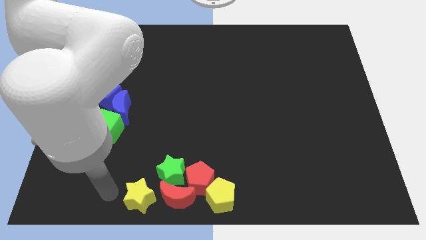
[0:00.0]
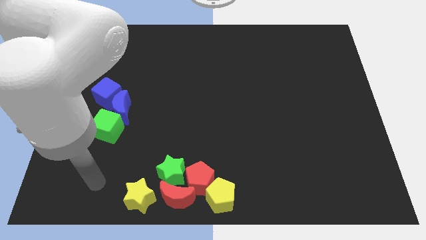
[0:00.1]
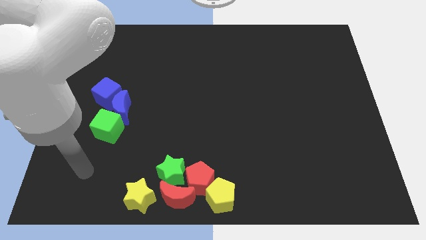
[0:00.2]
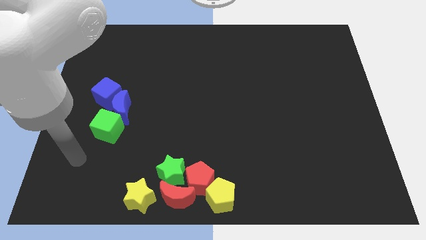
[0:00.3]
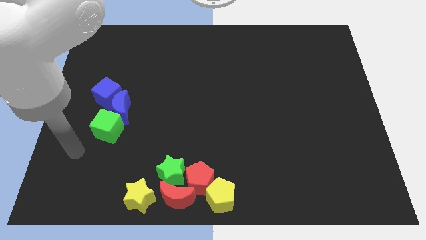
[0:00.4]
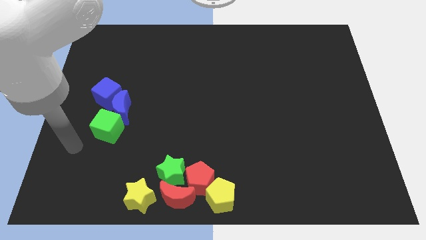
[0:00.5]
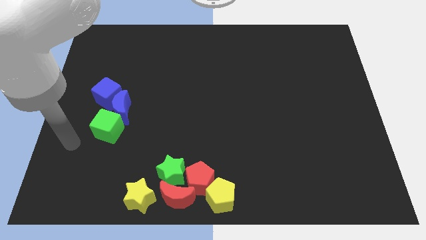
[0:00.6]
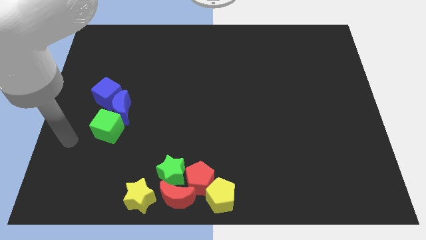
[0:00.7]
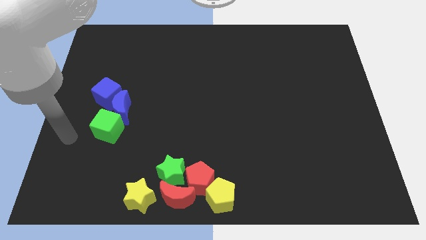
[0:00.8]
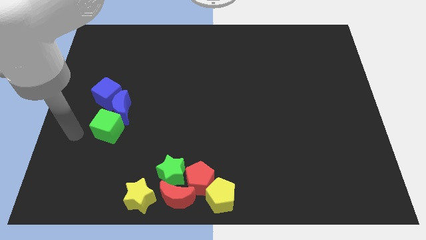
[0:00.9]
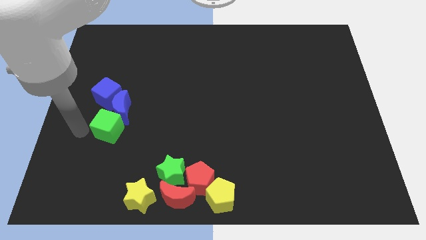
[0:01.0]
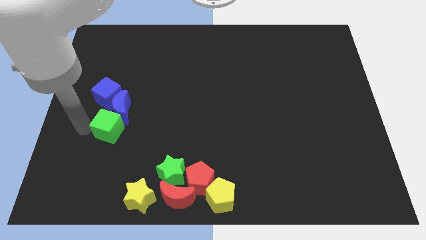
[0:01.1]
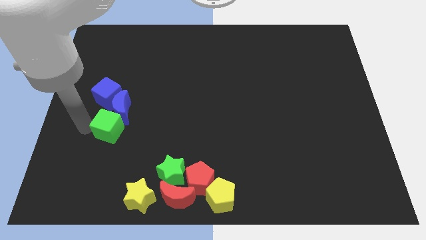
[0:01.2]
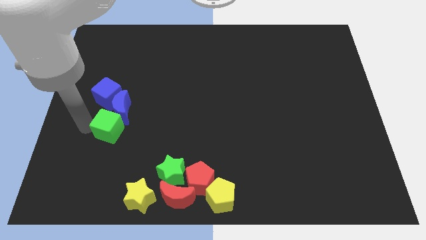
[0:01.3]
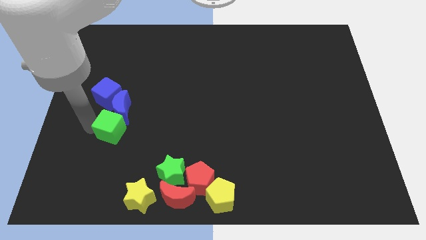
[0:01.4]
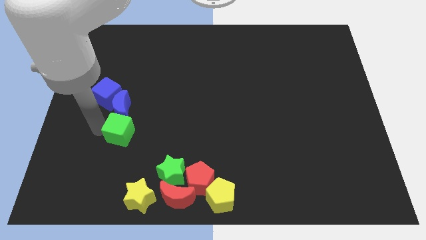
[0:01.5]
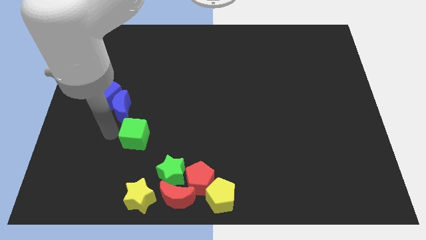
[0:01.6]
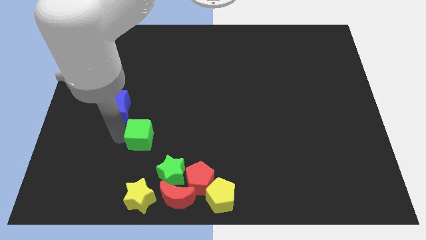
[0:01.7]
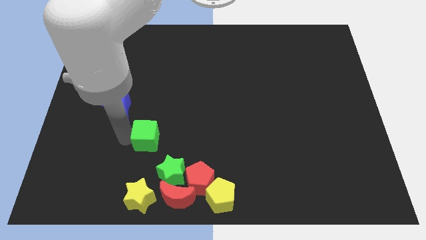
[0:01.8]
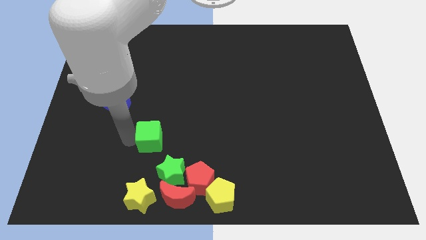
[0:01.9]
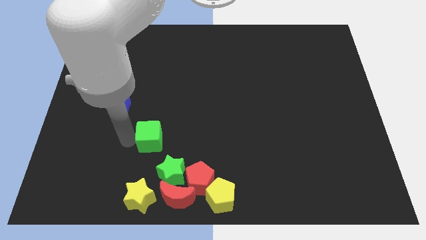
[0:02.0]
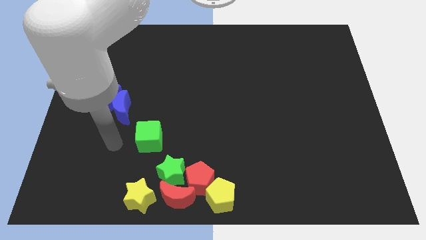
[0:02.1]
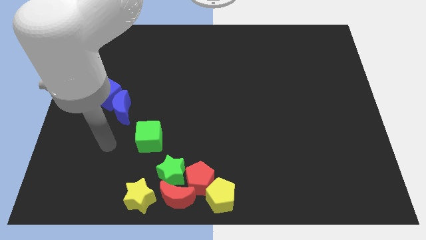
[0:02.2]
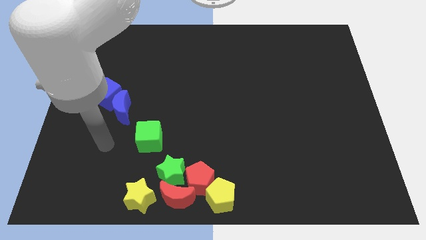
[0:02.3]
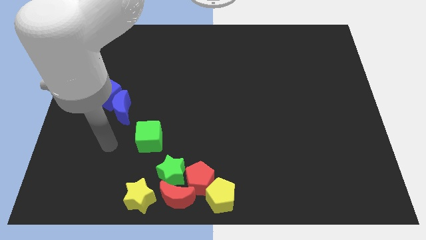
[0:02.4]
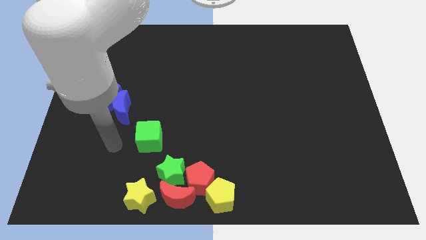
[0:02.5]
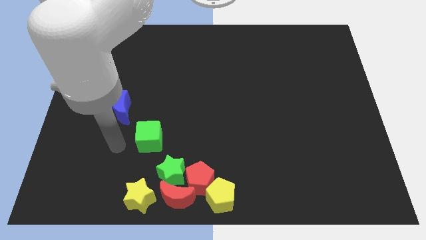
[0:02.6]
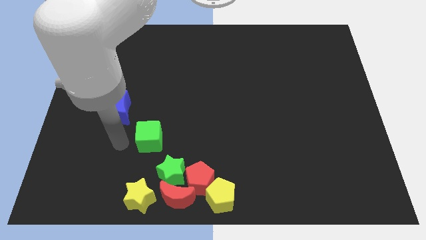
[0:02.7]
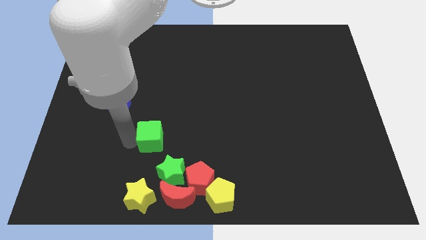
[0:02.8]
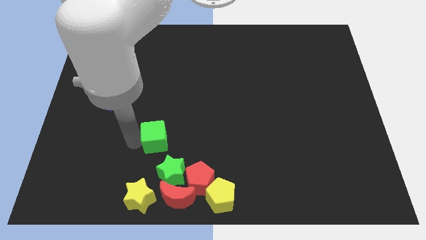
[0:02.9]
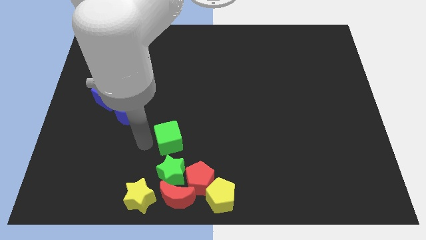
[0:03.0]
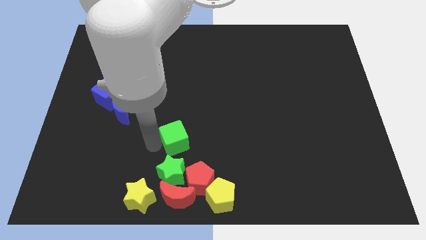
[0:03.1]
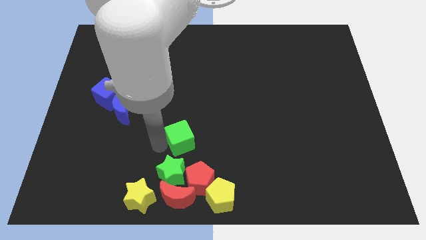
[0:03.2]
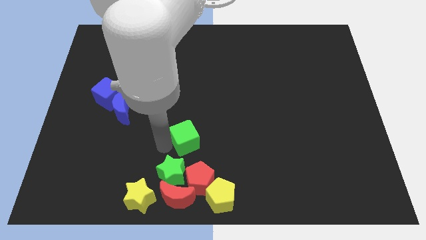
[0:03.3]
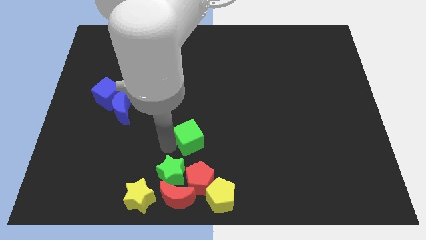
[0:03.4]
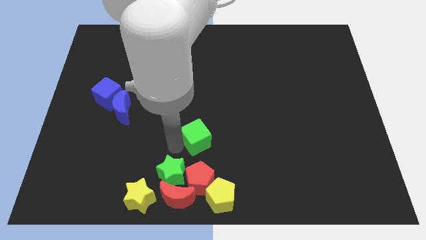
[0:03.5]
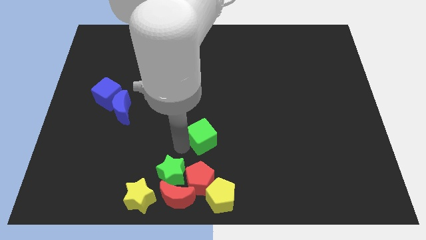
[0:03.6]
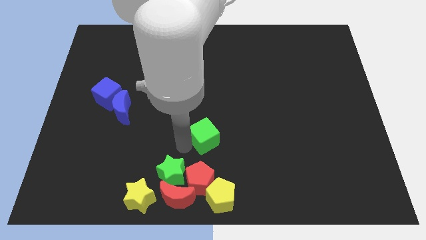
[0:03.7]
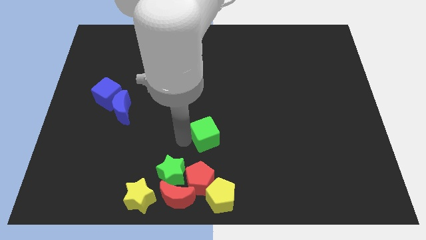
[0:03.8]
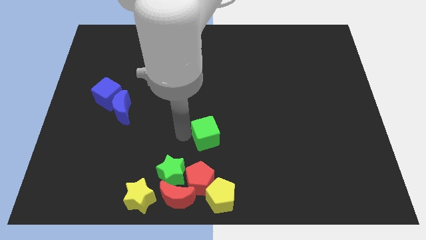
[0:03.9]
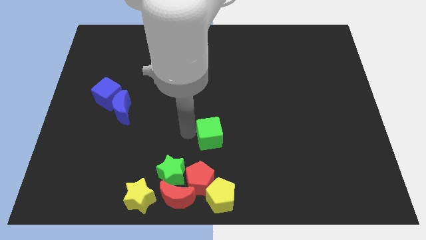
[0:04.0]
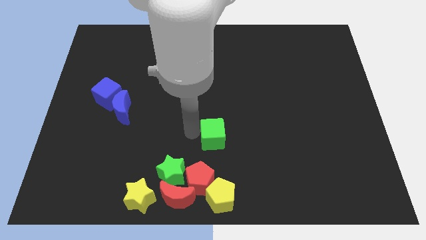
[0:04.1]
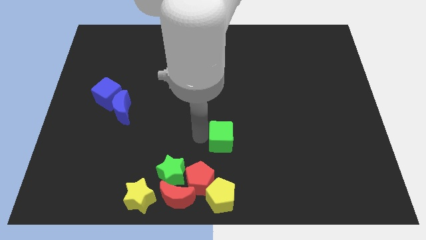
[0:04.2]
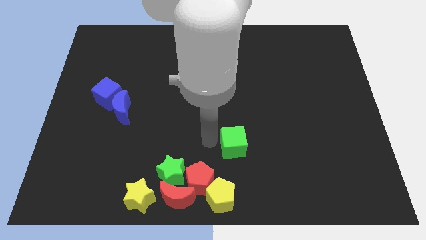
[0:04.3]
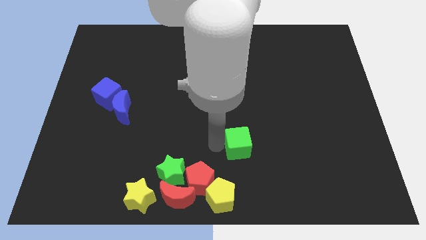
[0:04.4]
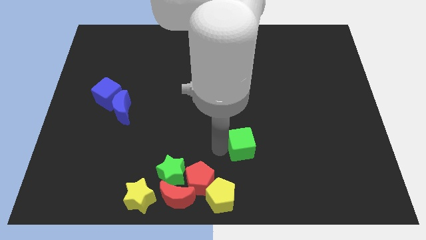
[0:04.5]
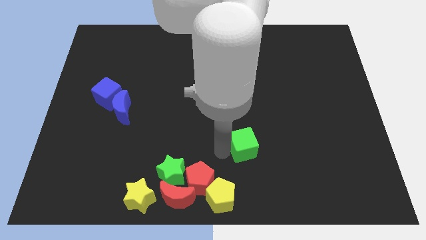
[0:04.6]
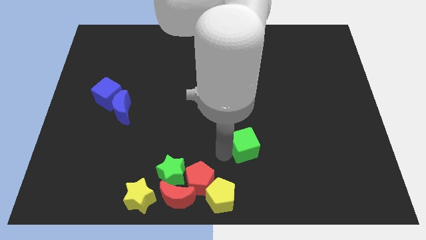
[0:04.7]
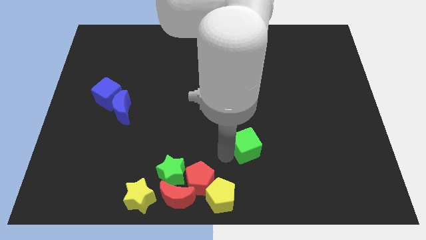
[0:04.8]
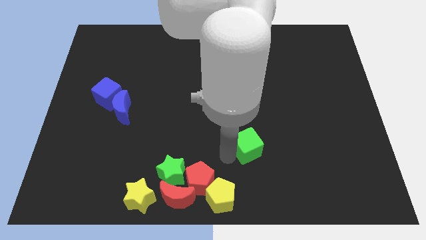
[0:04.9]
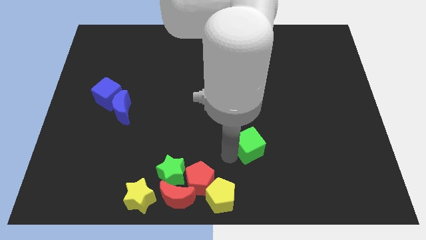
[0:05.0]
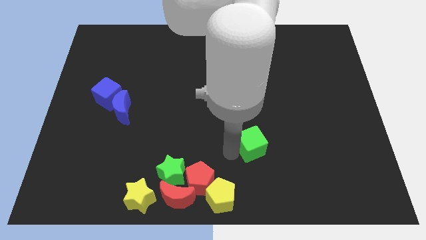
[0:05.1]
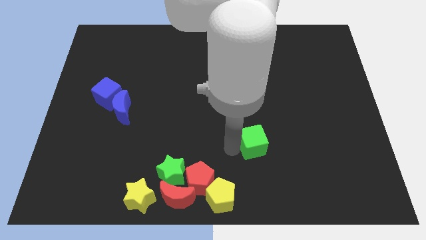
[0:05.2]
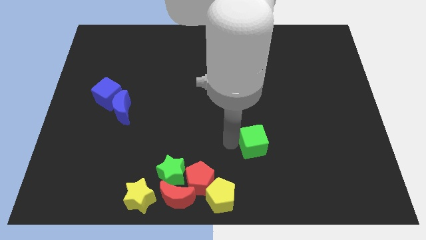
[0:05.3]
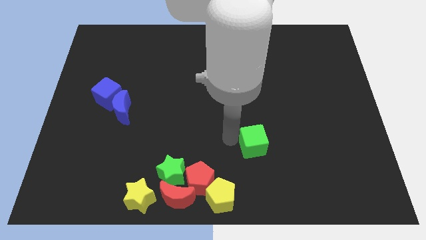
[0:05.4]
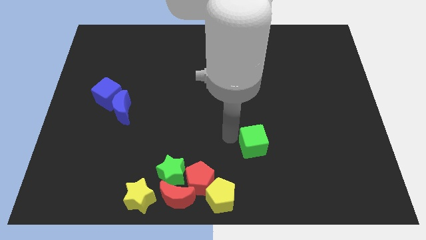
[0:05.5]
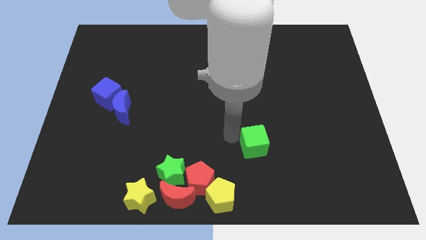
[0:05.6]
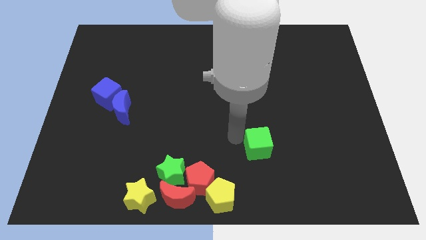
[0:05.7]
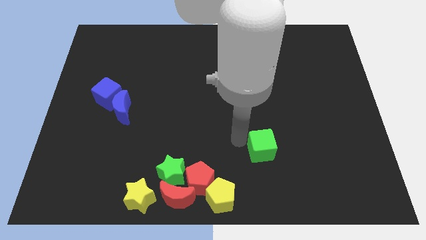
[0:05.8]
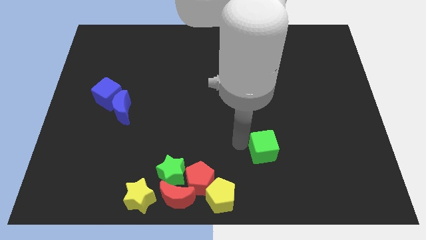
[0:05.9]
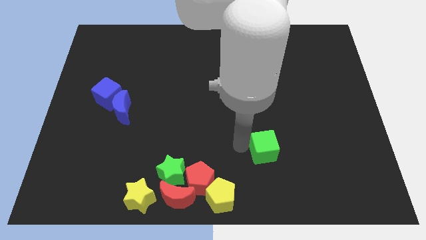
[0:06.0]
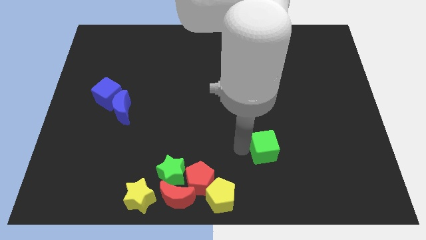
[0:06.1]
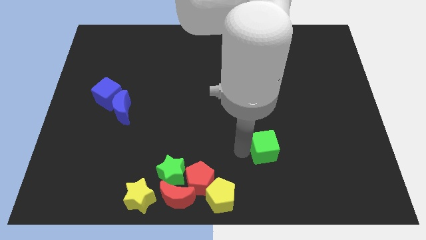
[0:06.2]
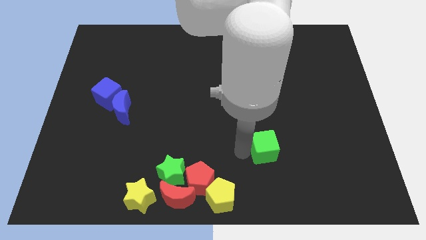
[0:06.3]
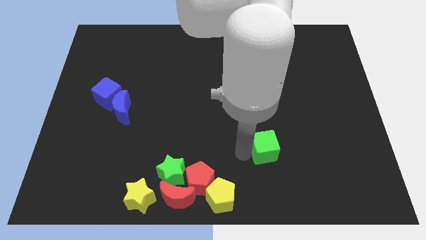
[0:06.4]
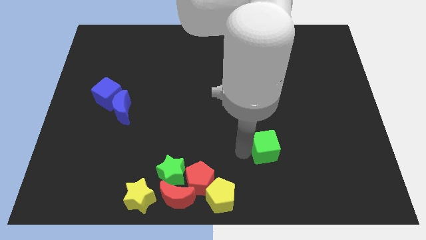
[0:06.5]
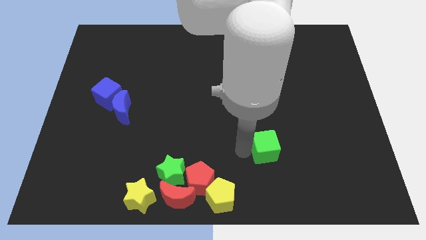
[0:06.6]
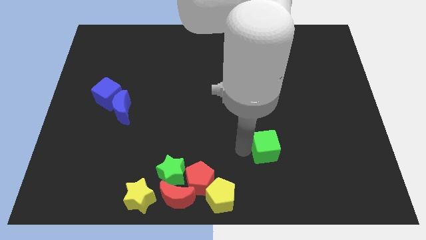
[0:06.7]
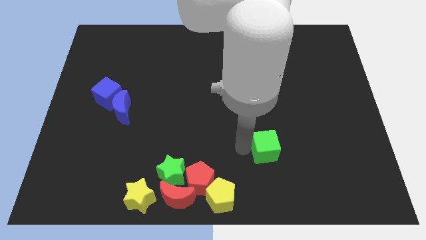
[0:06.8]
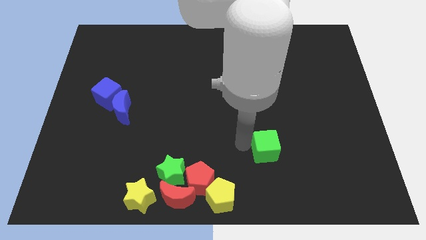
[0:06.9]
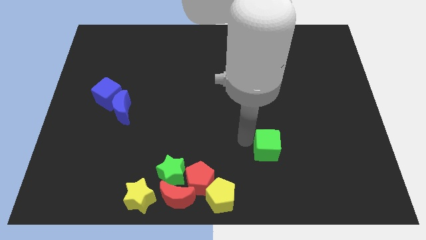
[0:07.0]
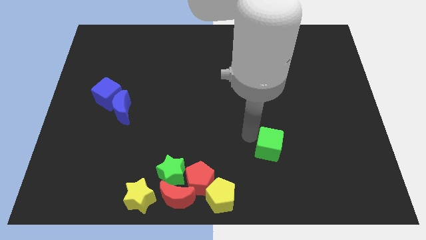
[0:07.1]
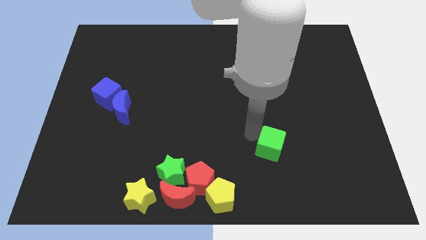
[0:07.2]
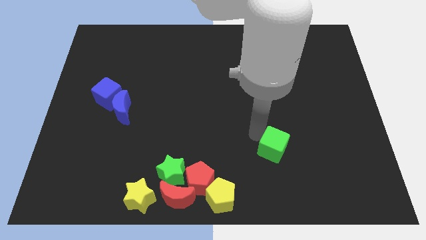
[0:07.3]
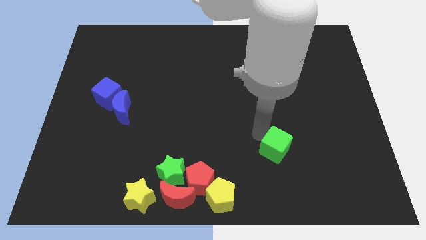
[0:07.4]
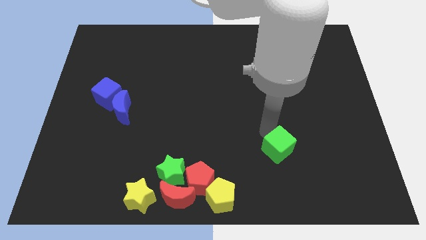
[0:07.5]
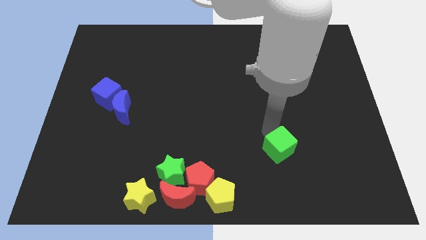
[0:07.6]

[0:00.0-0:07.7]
move the green cube to the right

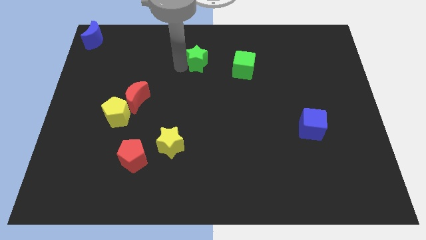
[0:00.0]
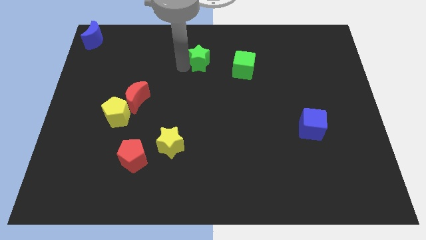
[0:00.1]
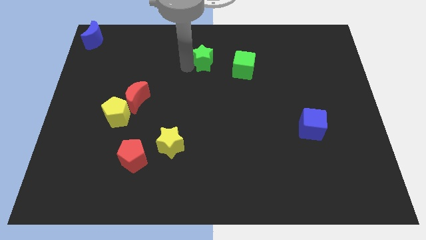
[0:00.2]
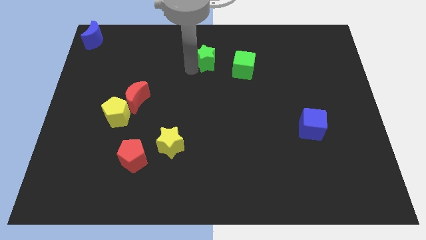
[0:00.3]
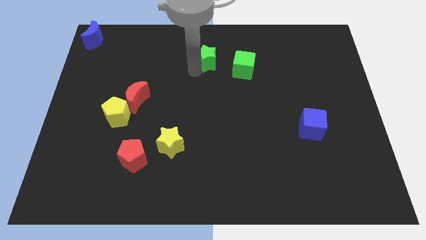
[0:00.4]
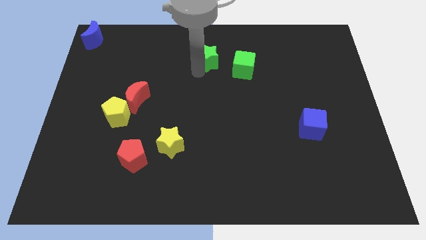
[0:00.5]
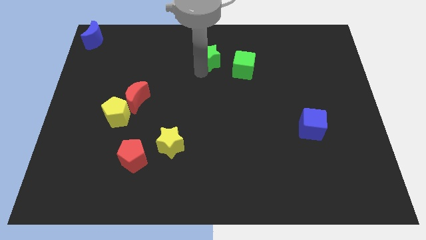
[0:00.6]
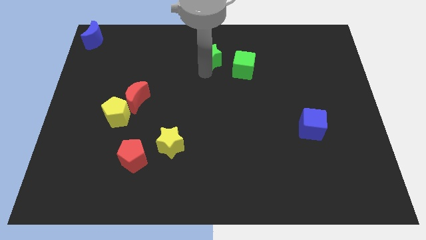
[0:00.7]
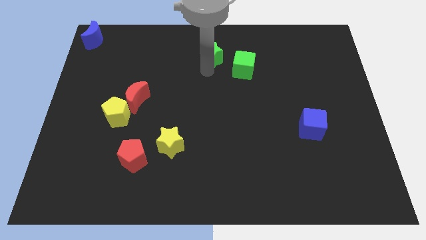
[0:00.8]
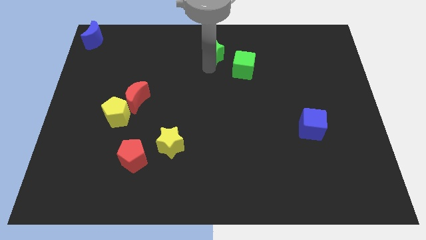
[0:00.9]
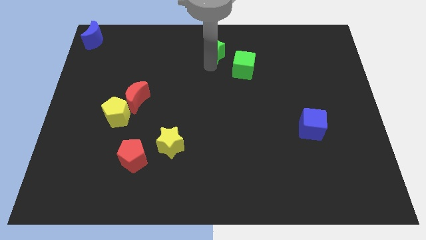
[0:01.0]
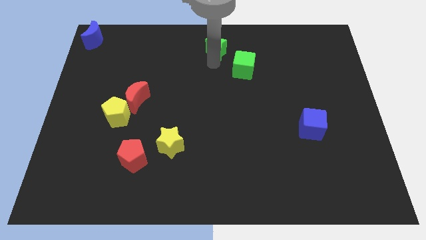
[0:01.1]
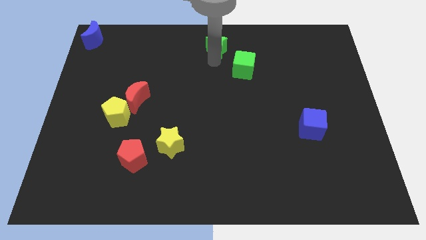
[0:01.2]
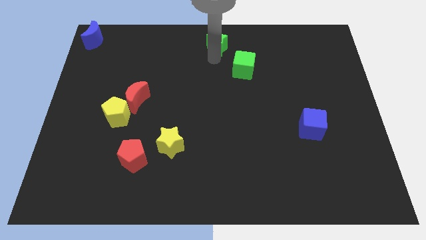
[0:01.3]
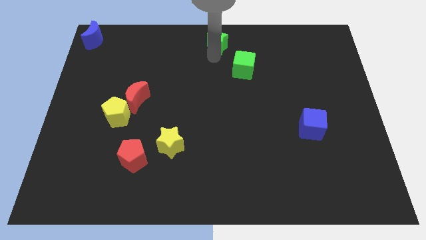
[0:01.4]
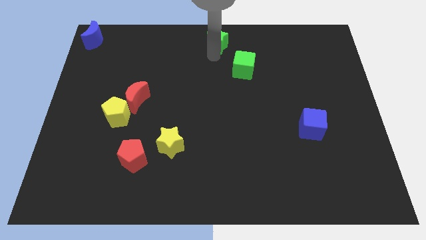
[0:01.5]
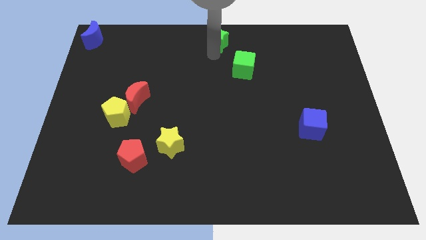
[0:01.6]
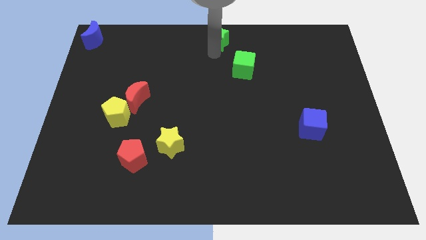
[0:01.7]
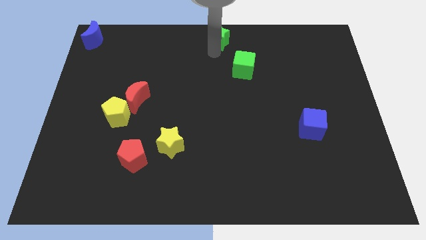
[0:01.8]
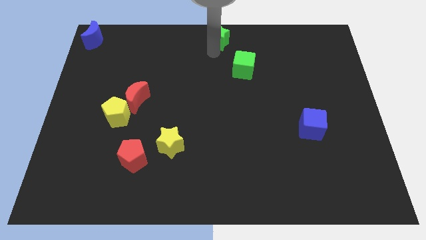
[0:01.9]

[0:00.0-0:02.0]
push the green star towards the top center of the board
